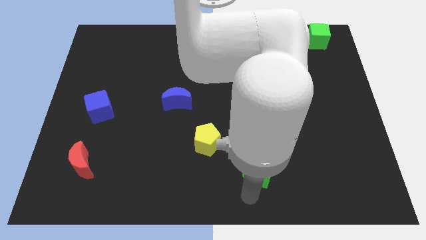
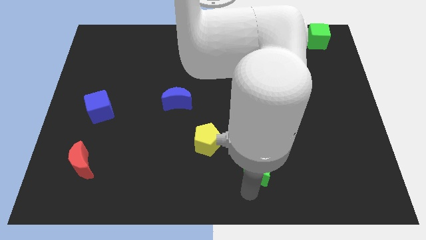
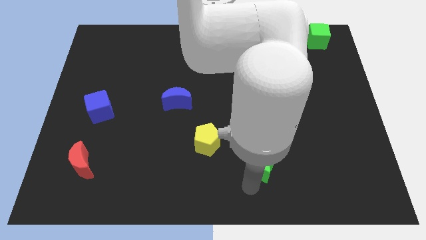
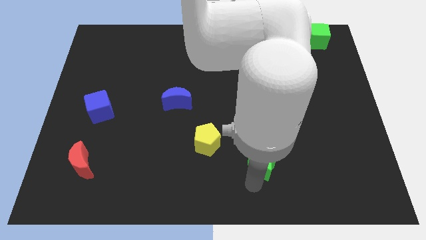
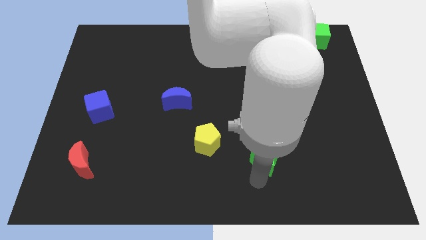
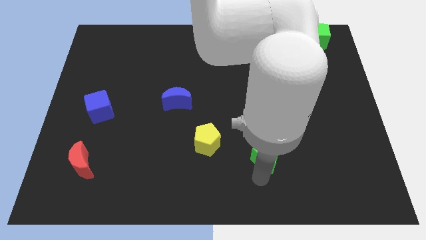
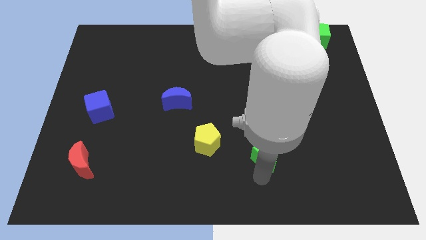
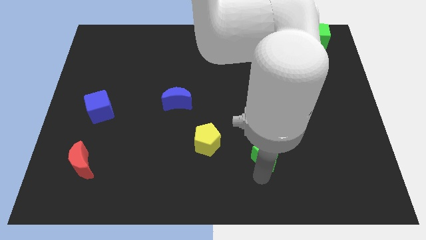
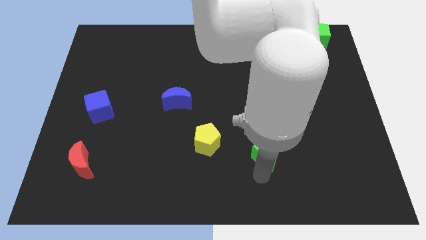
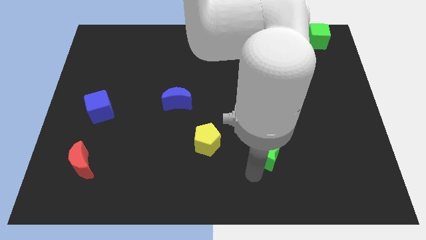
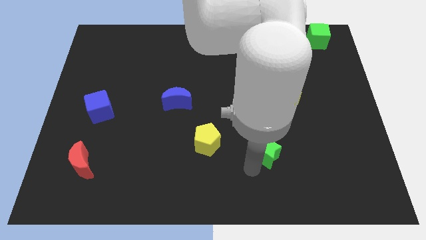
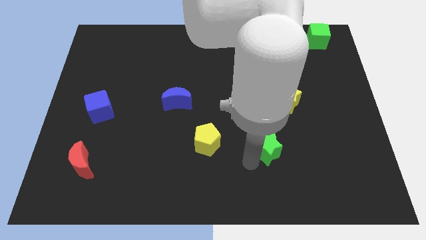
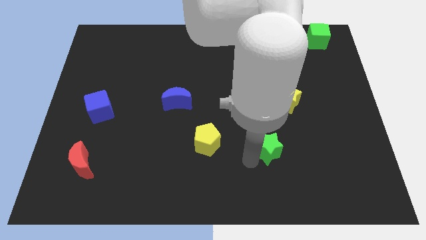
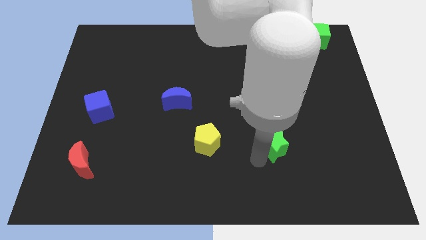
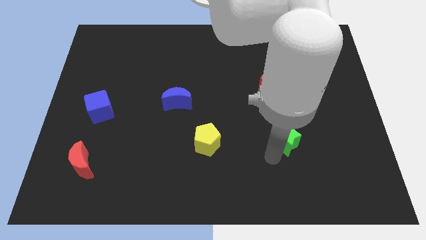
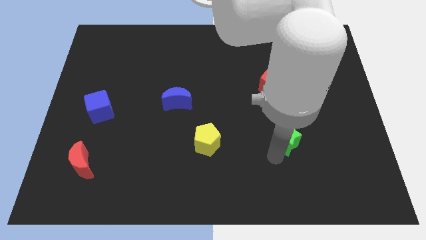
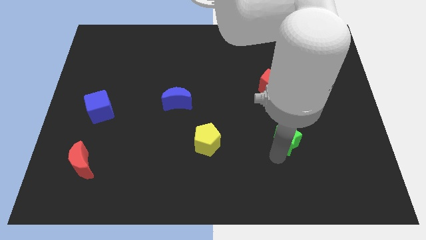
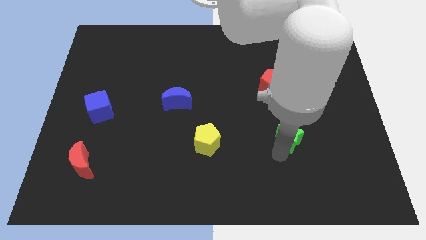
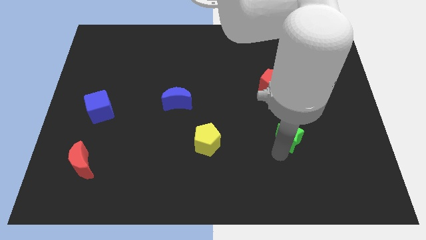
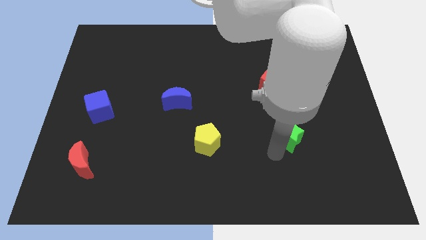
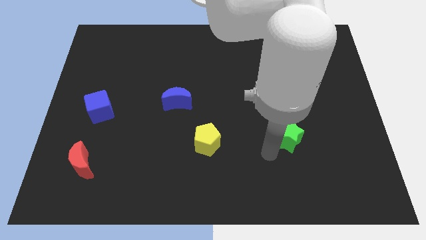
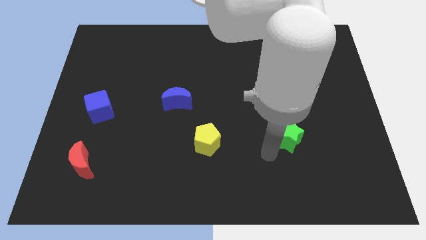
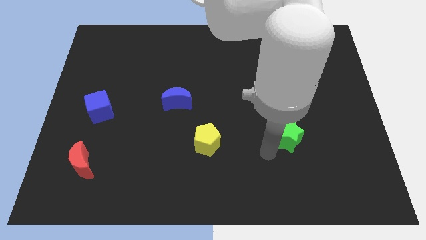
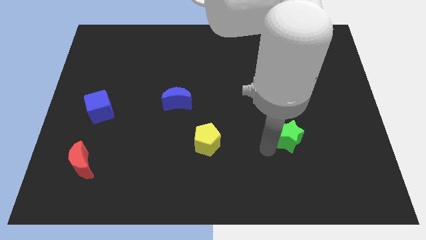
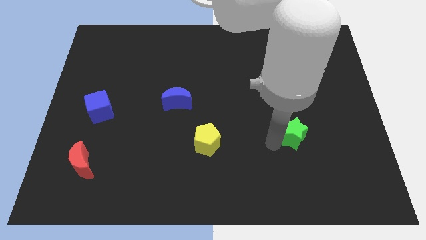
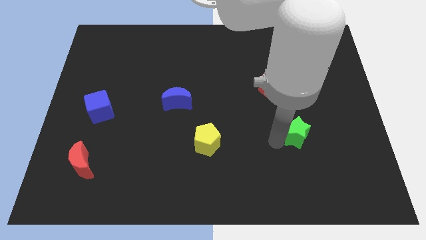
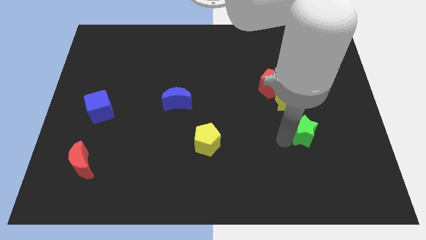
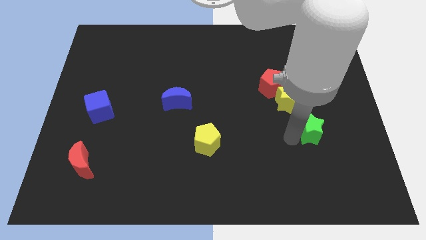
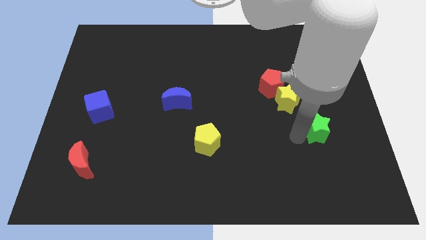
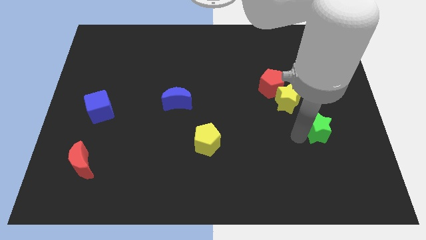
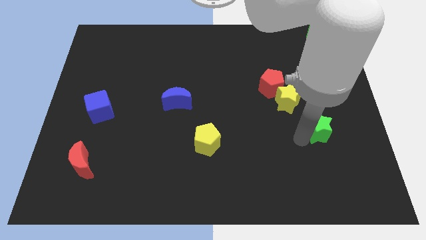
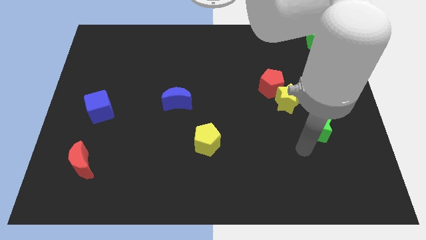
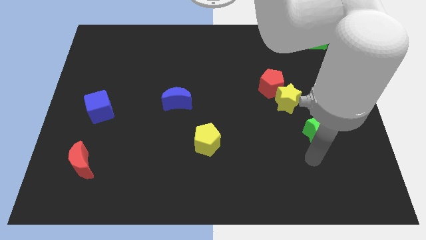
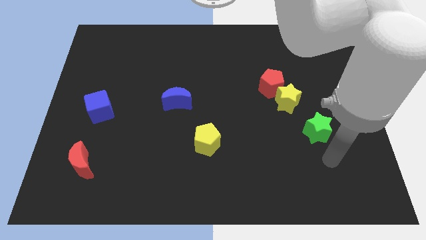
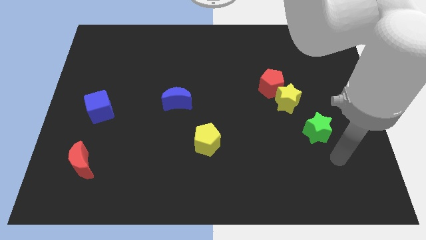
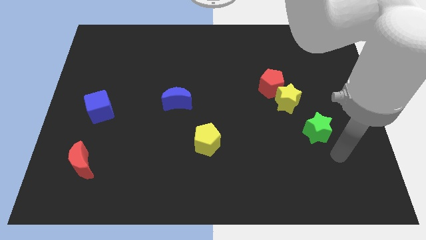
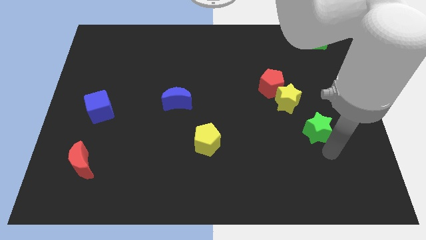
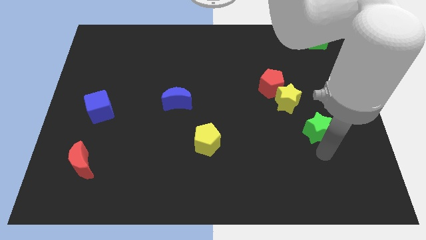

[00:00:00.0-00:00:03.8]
move the green star diagonal to the bottom right of the yellow star

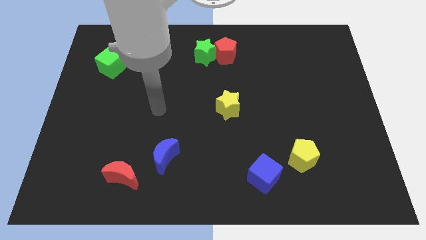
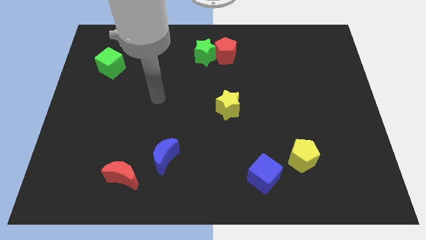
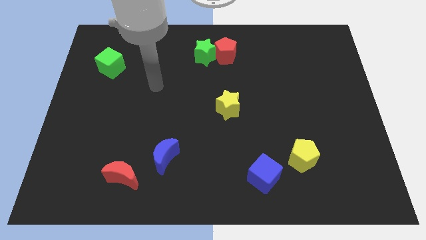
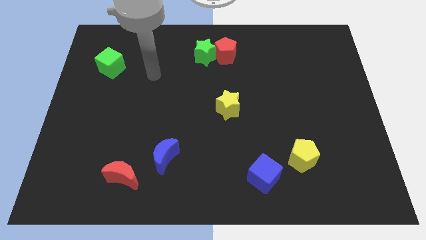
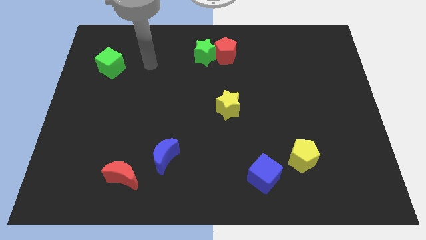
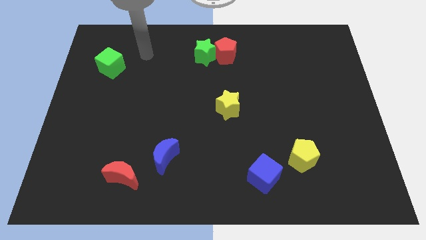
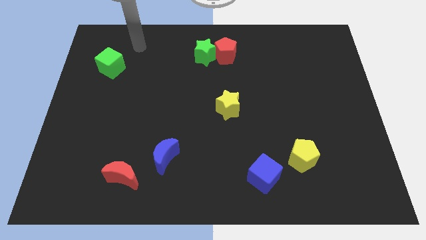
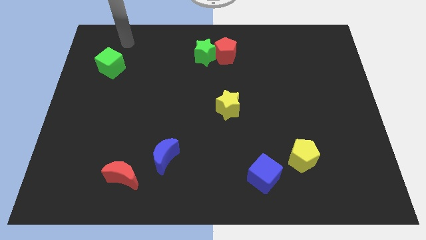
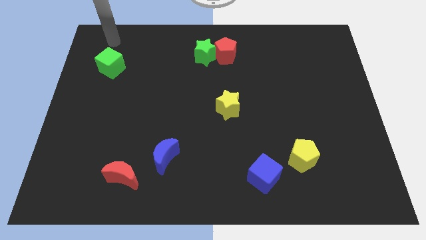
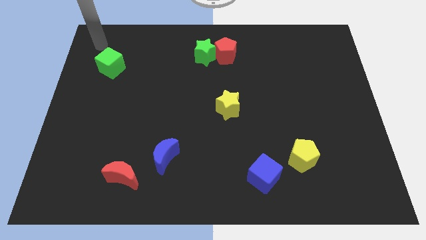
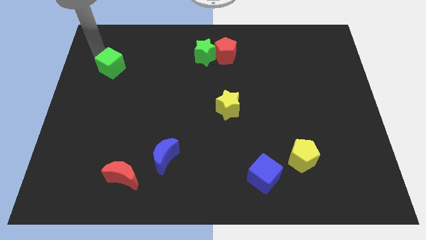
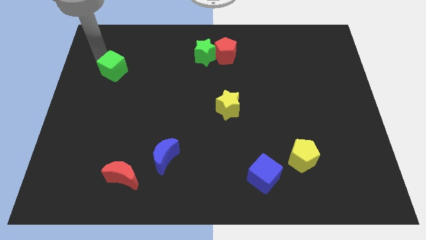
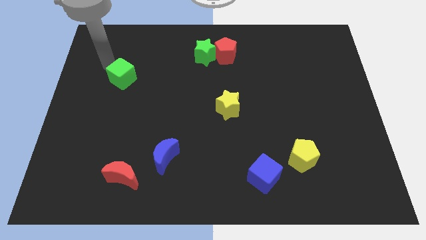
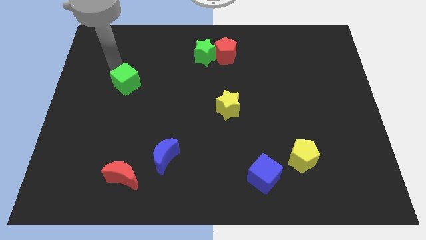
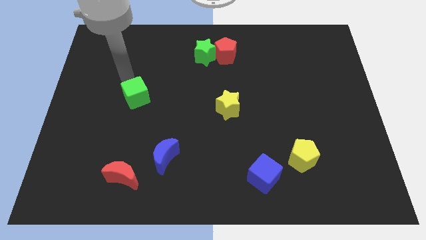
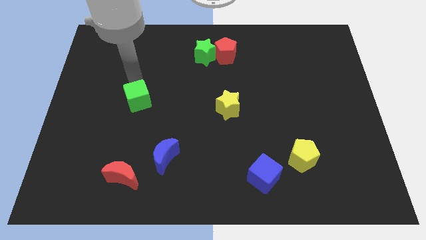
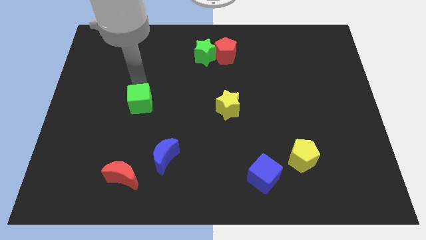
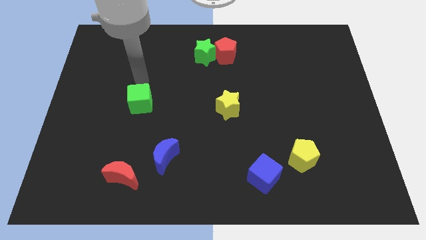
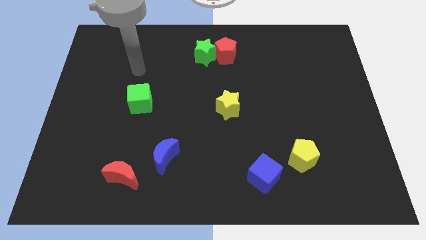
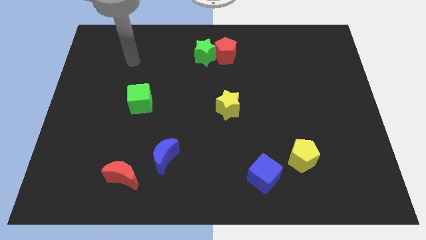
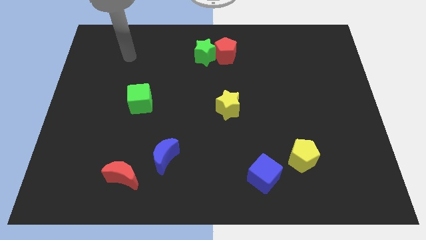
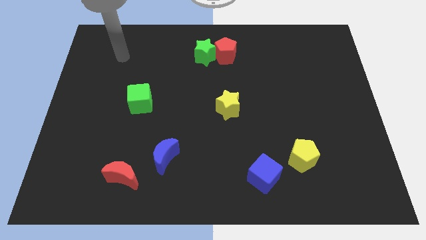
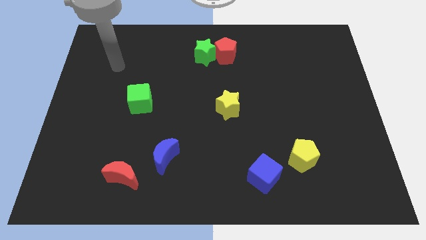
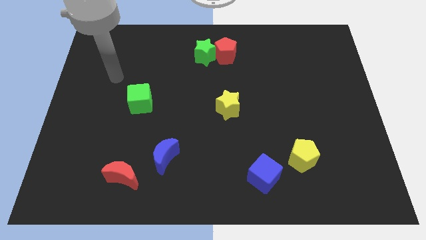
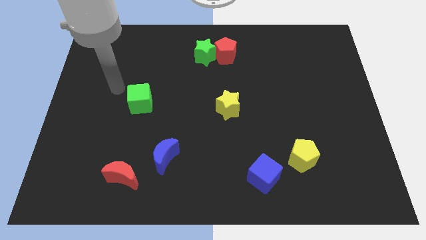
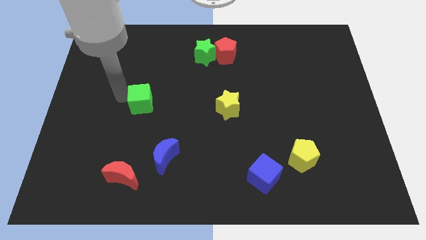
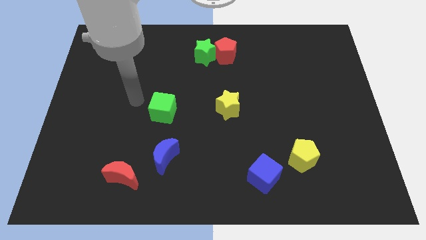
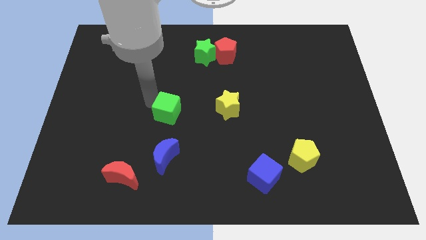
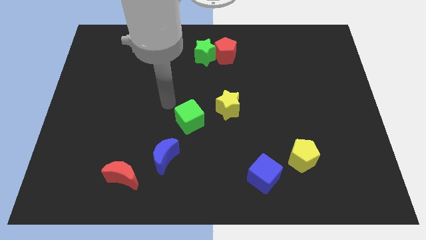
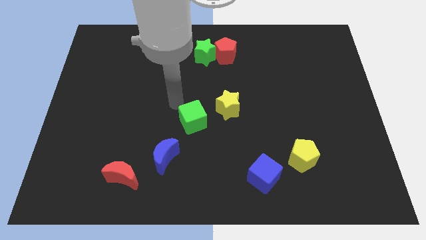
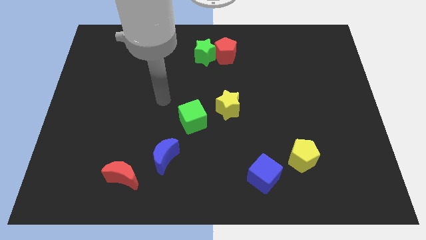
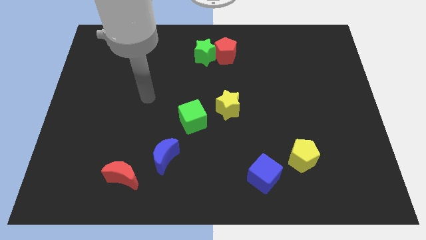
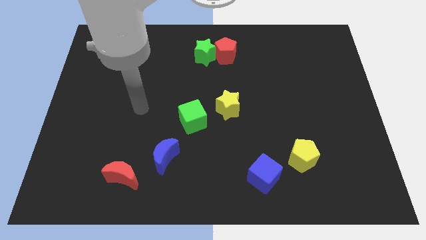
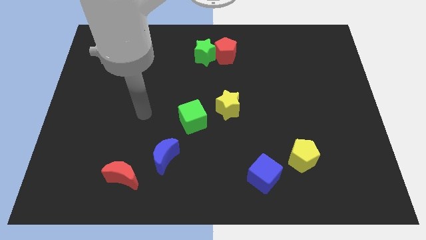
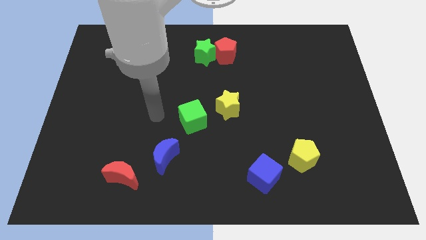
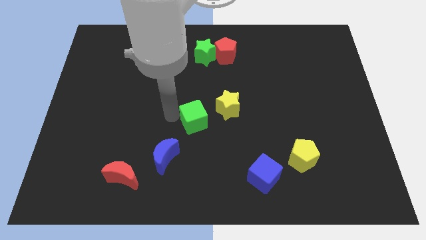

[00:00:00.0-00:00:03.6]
move your arm close to the green cube

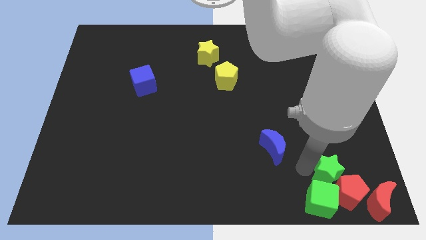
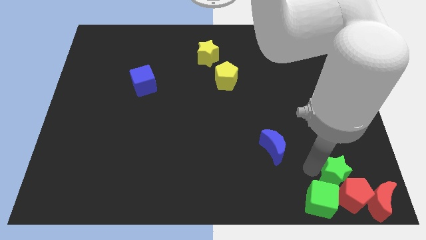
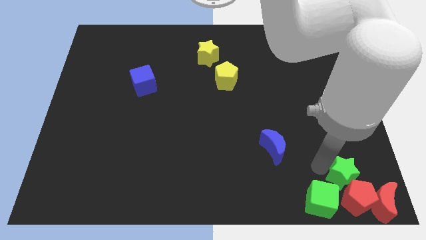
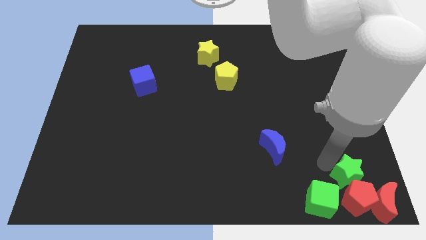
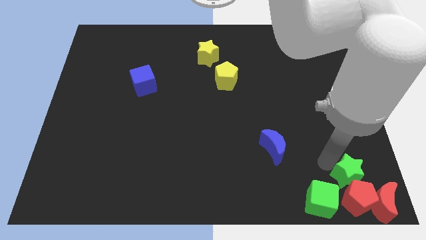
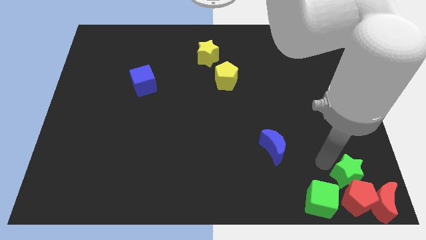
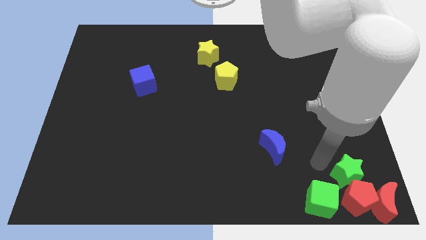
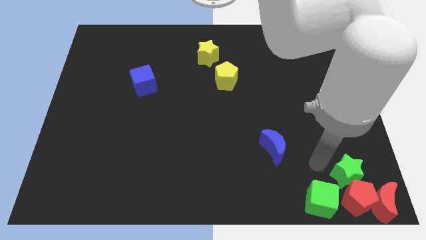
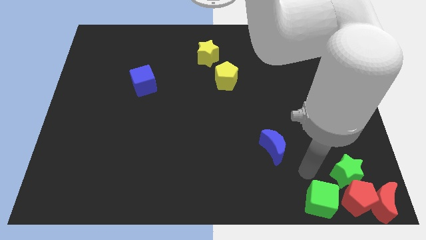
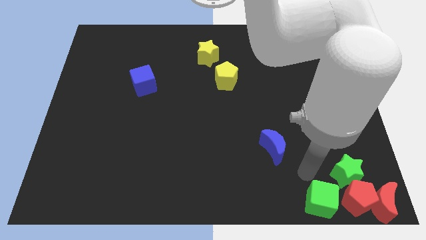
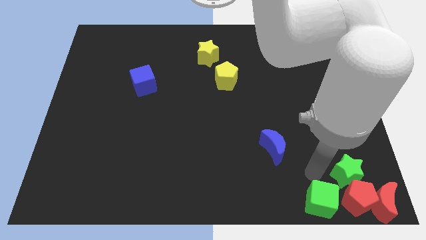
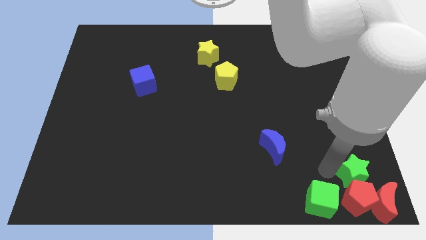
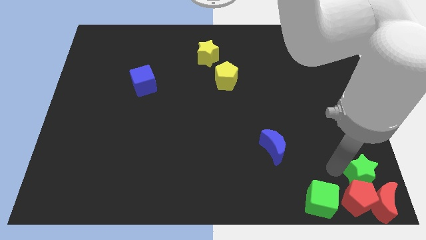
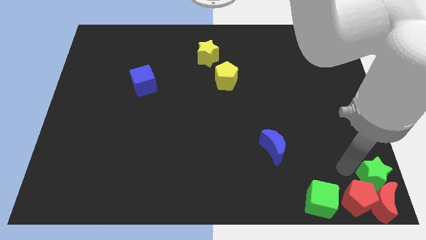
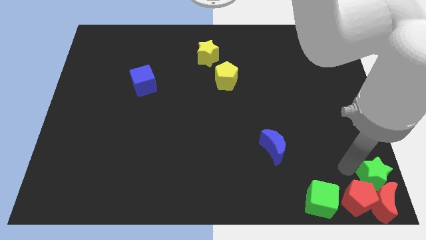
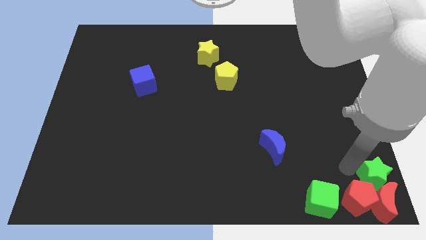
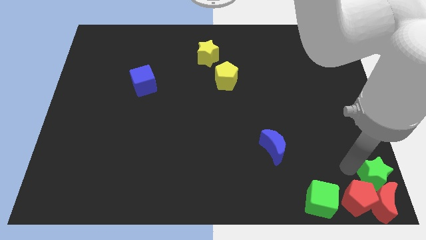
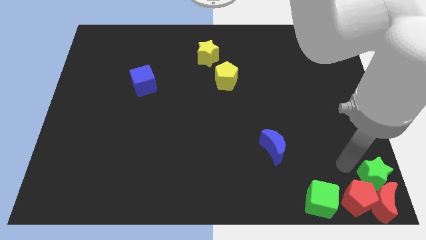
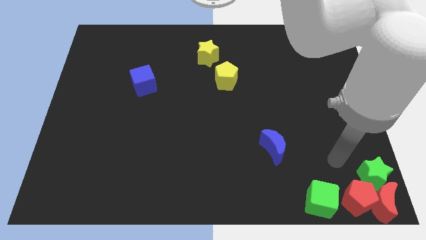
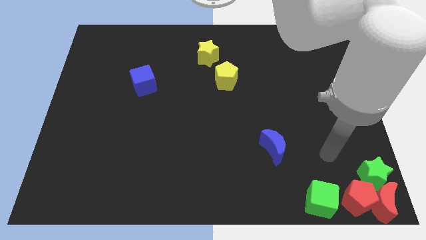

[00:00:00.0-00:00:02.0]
place the green star on top of the red blocks
